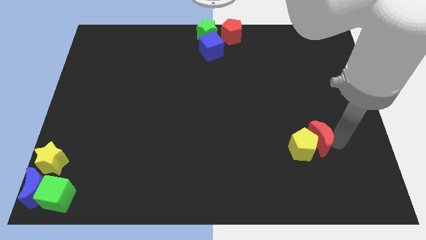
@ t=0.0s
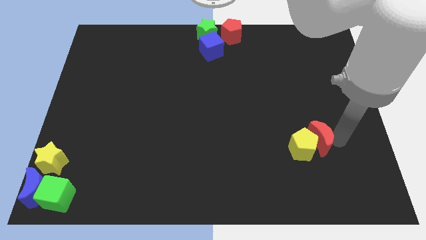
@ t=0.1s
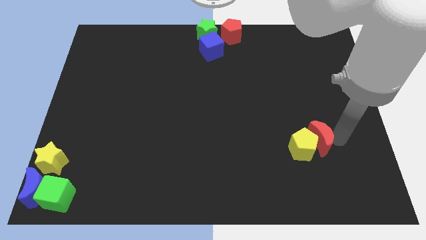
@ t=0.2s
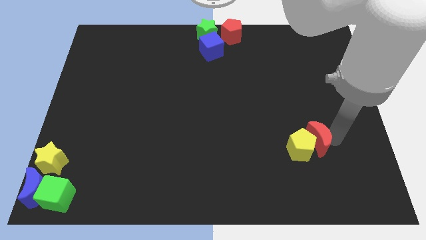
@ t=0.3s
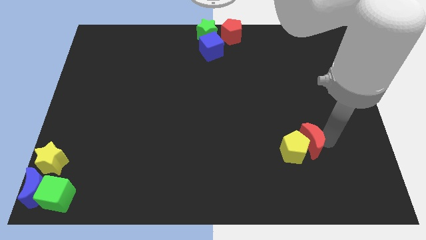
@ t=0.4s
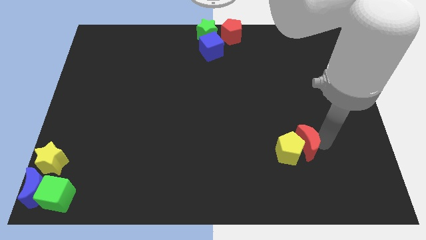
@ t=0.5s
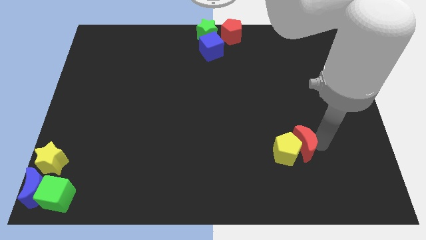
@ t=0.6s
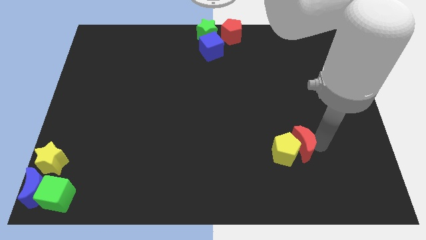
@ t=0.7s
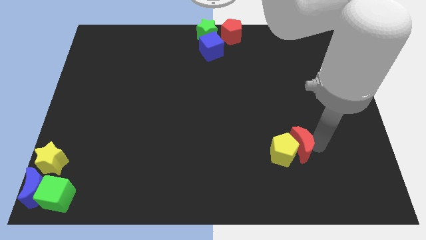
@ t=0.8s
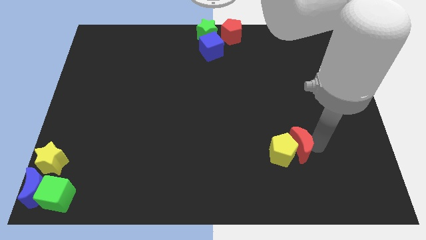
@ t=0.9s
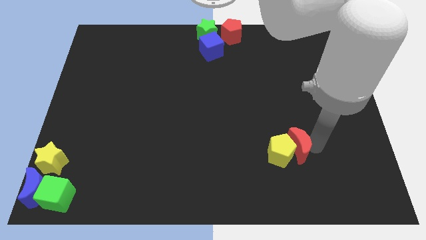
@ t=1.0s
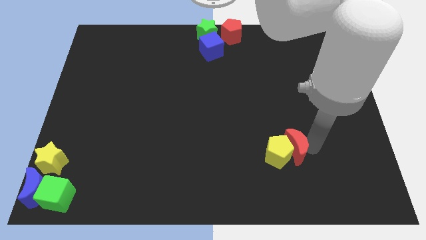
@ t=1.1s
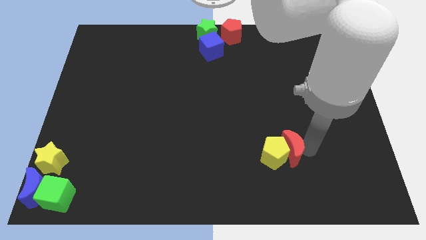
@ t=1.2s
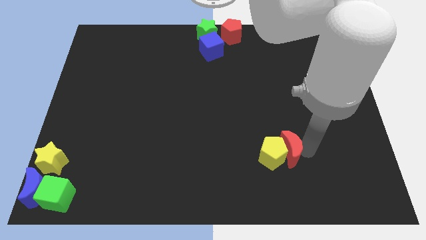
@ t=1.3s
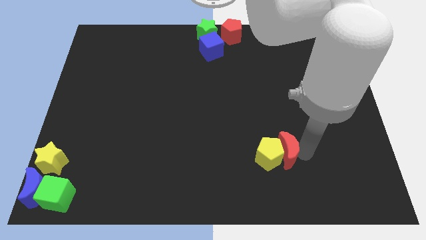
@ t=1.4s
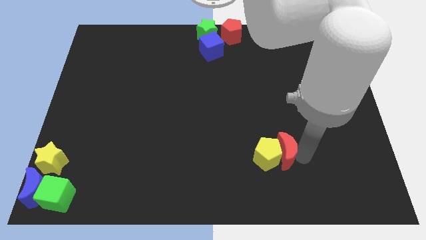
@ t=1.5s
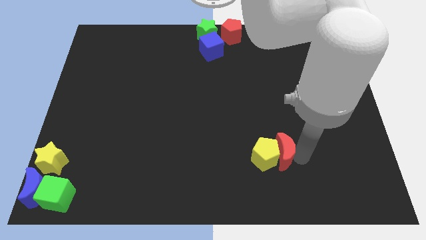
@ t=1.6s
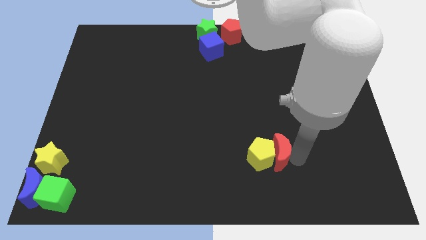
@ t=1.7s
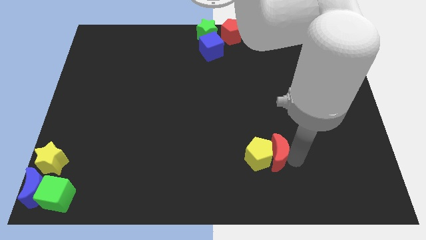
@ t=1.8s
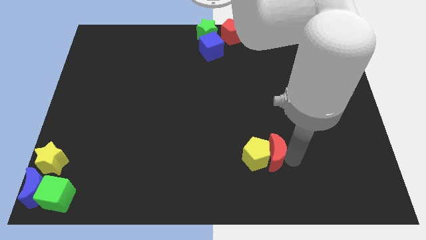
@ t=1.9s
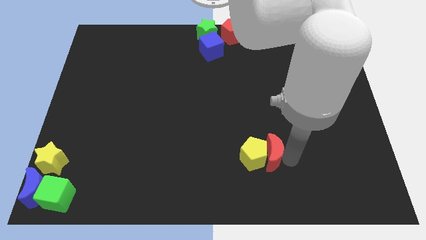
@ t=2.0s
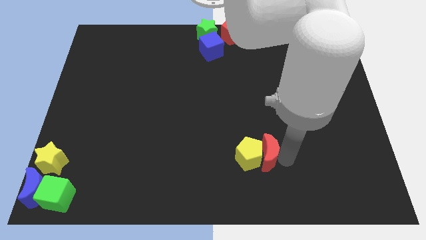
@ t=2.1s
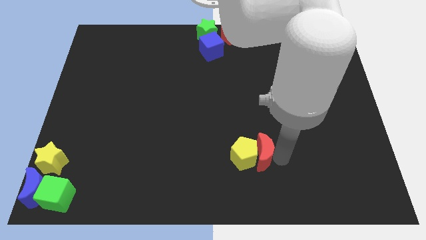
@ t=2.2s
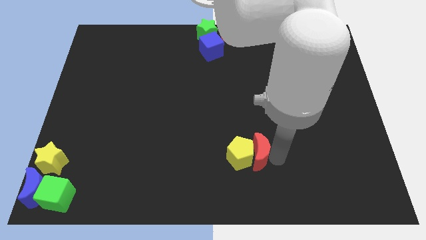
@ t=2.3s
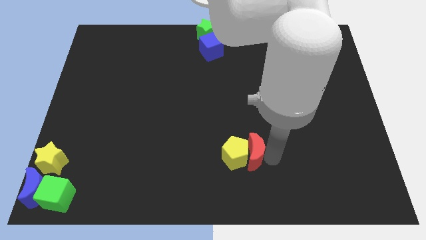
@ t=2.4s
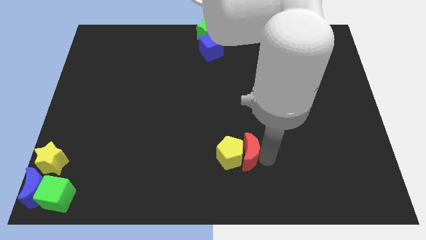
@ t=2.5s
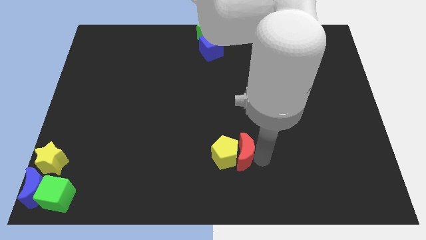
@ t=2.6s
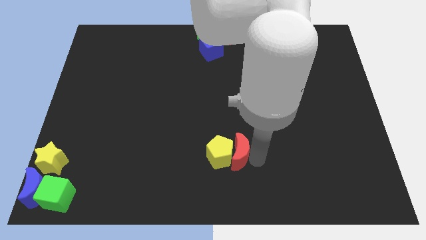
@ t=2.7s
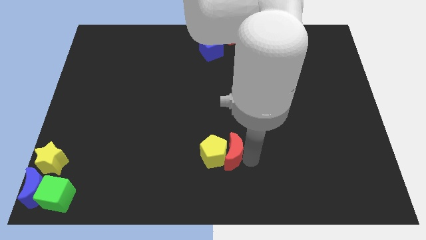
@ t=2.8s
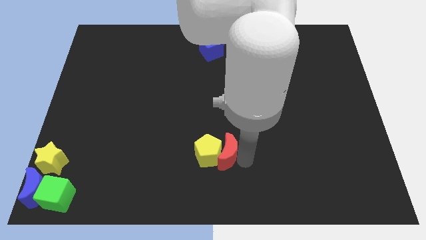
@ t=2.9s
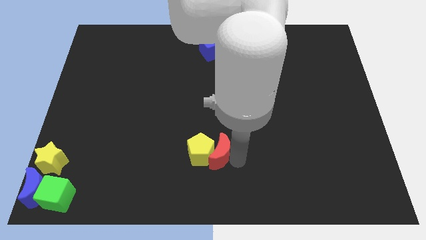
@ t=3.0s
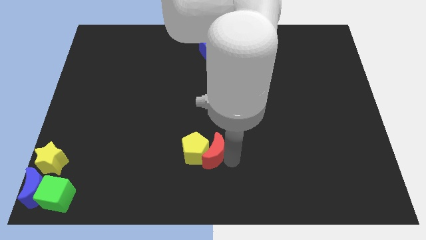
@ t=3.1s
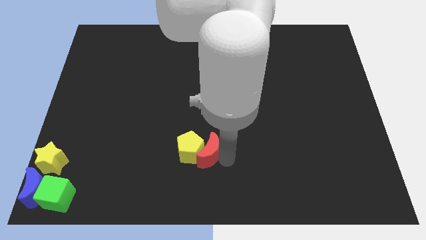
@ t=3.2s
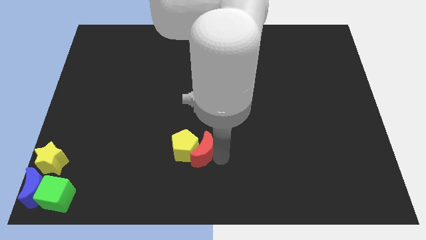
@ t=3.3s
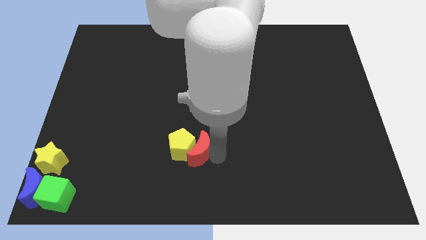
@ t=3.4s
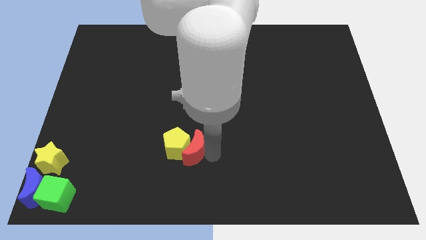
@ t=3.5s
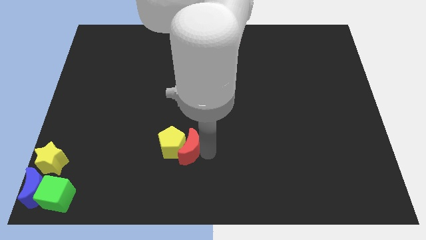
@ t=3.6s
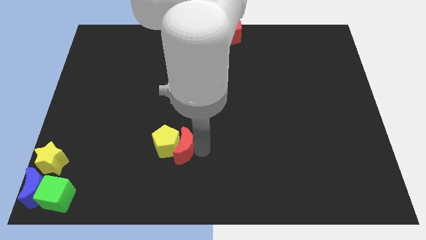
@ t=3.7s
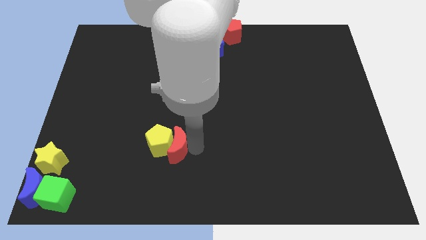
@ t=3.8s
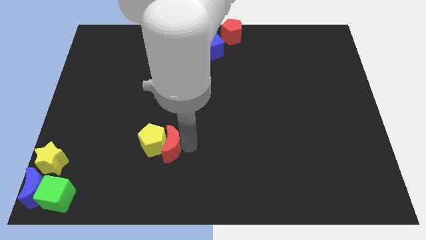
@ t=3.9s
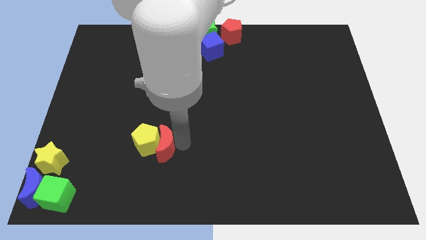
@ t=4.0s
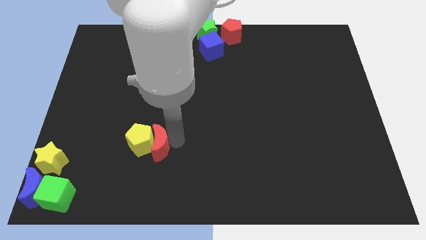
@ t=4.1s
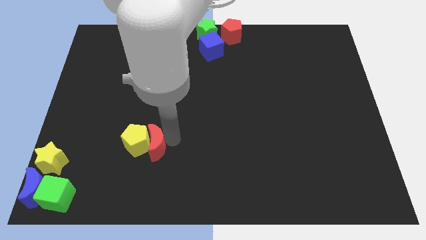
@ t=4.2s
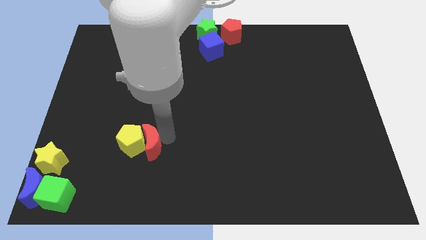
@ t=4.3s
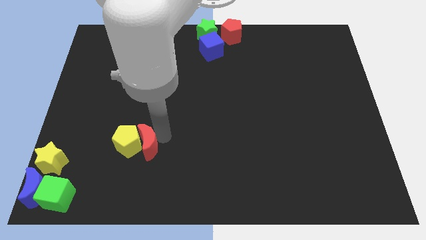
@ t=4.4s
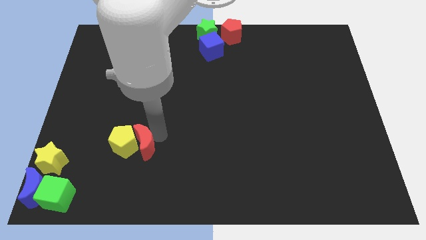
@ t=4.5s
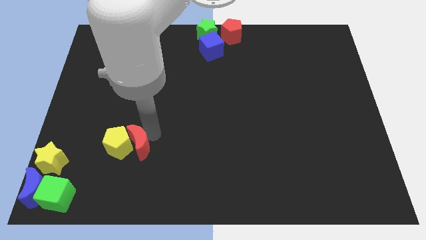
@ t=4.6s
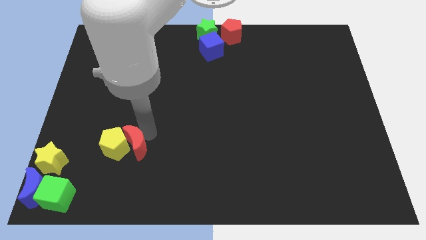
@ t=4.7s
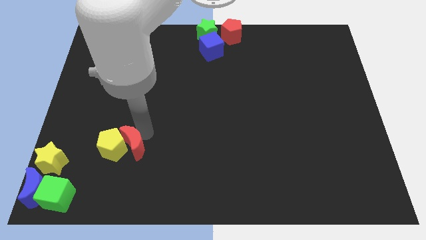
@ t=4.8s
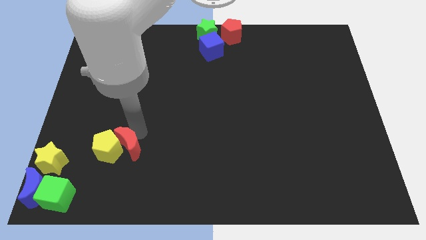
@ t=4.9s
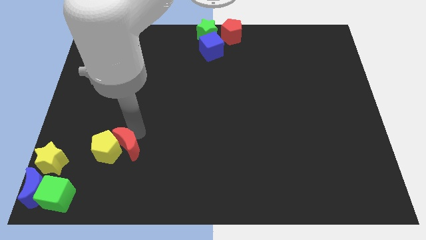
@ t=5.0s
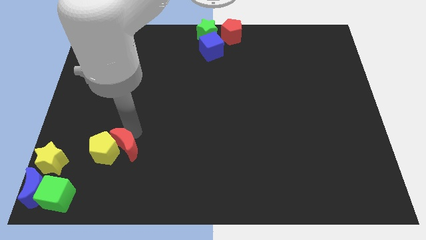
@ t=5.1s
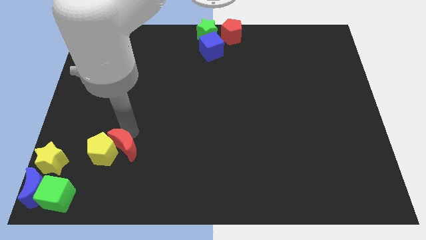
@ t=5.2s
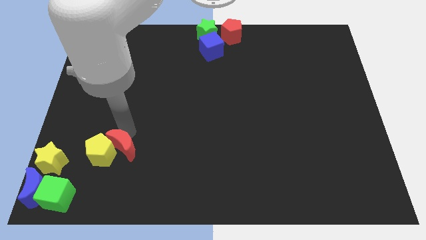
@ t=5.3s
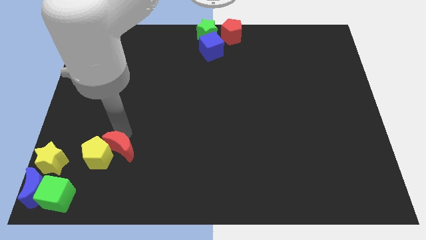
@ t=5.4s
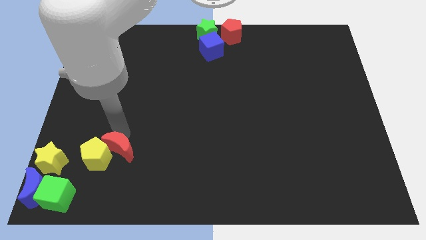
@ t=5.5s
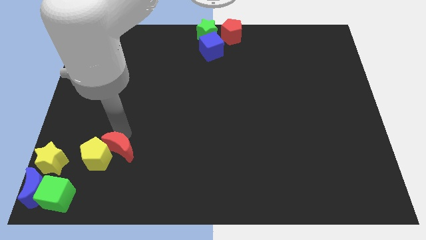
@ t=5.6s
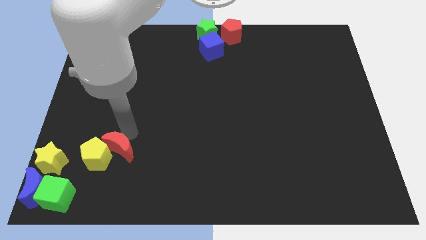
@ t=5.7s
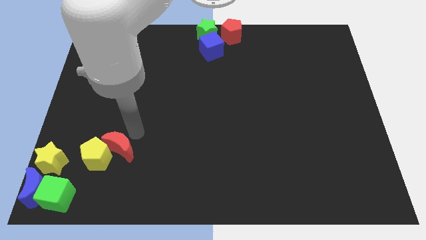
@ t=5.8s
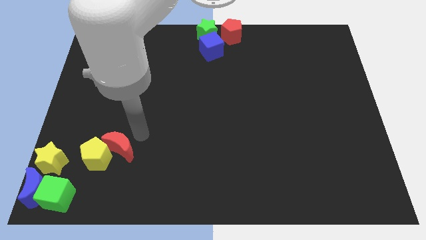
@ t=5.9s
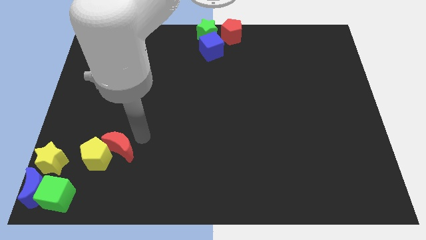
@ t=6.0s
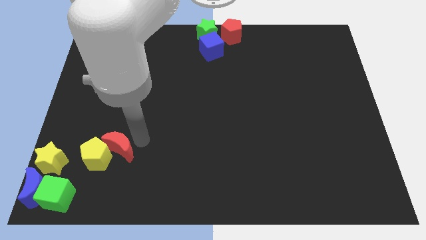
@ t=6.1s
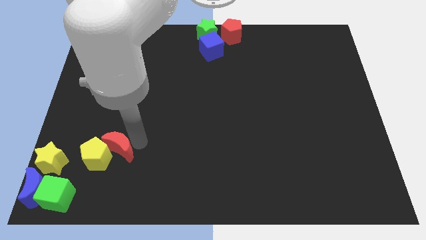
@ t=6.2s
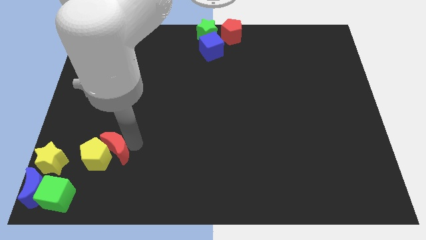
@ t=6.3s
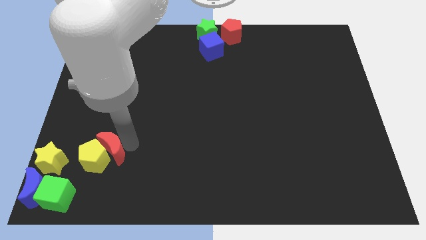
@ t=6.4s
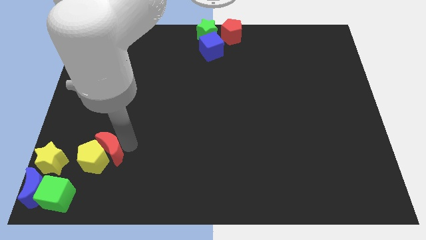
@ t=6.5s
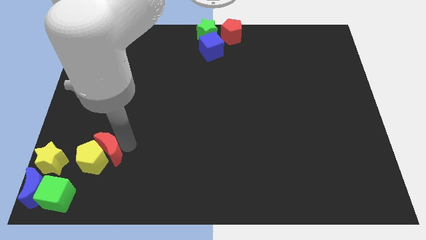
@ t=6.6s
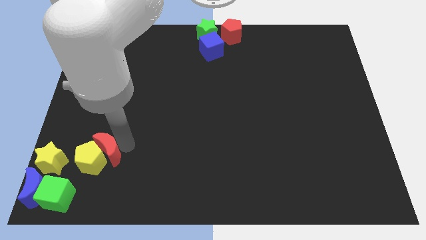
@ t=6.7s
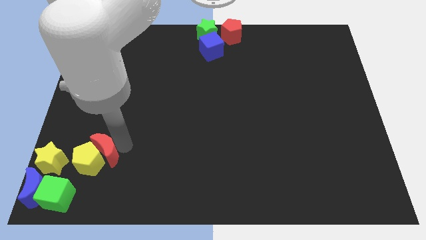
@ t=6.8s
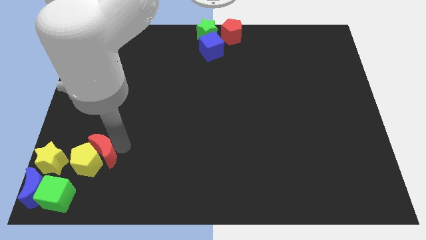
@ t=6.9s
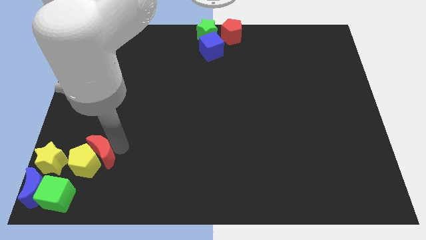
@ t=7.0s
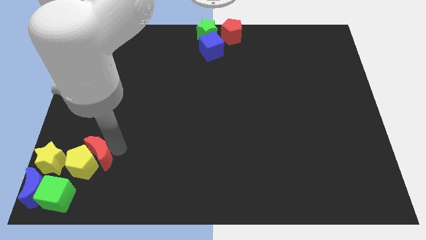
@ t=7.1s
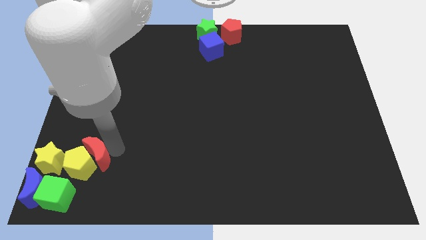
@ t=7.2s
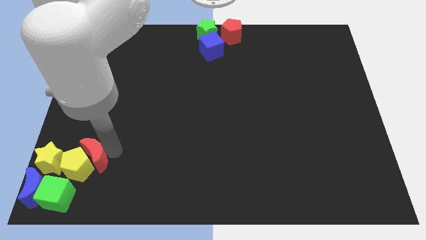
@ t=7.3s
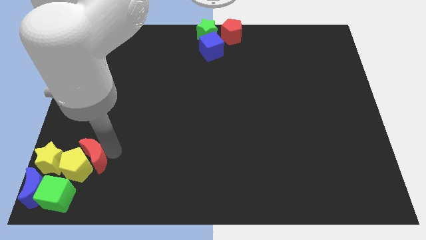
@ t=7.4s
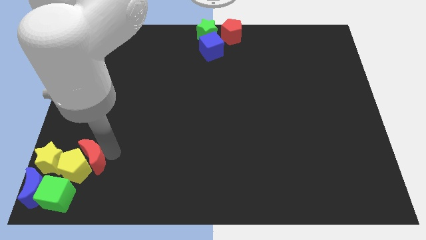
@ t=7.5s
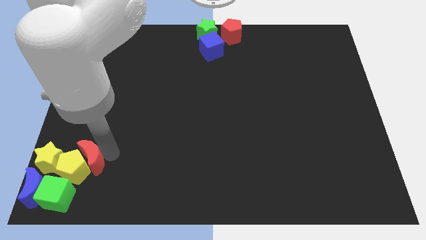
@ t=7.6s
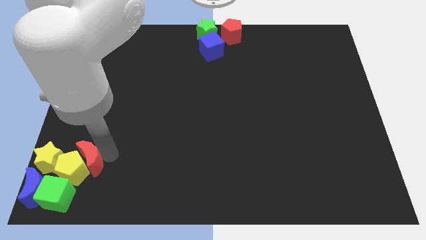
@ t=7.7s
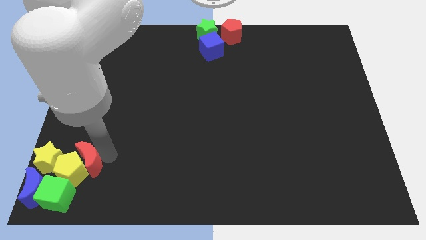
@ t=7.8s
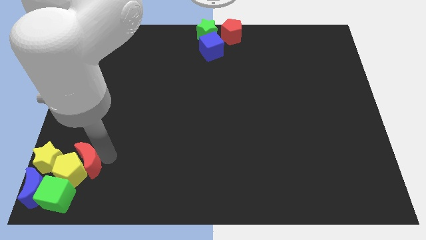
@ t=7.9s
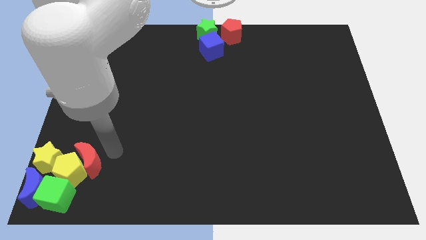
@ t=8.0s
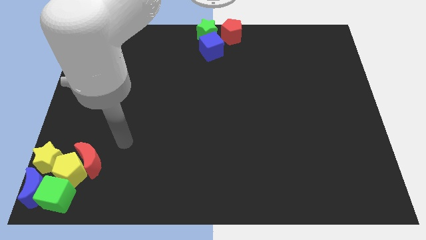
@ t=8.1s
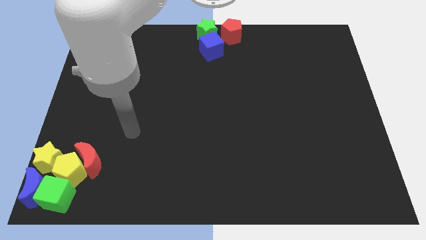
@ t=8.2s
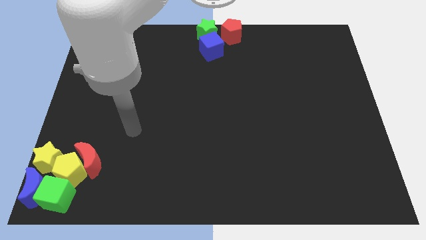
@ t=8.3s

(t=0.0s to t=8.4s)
push the yellow pentagon and red moon into the group

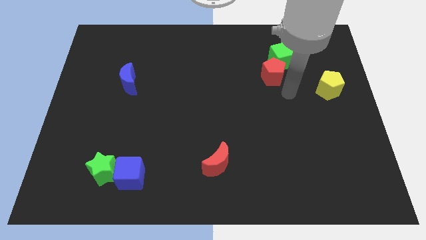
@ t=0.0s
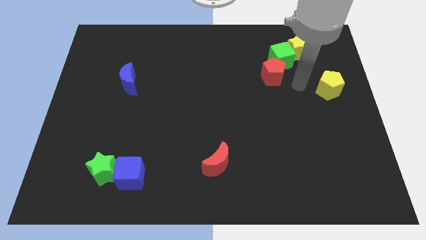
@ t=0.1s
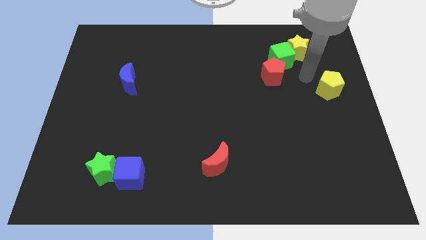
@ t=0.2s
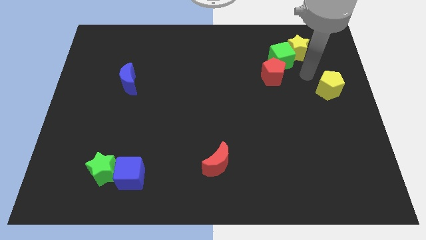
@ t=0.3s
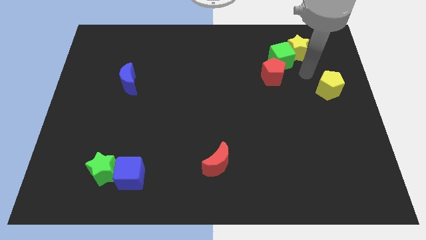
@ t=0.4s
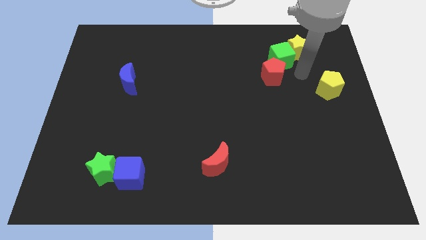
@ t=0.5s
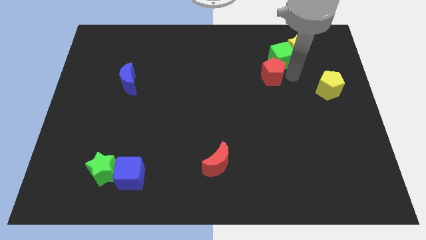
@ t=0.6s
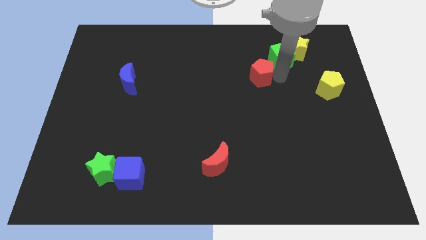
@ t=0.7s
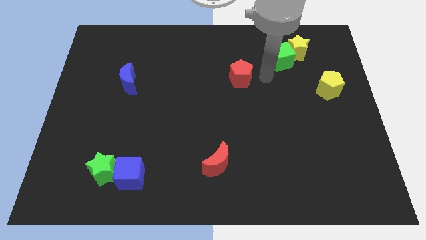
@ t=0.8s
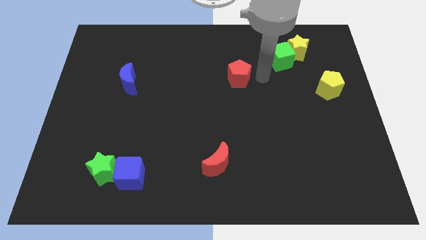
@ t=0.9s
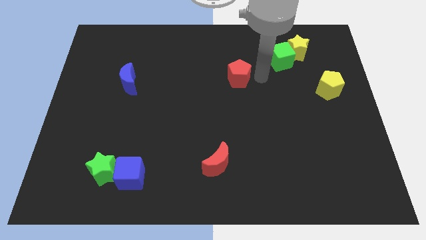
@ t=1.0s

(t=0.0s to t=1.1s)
slide the red pentagon to the left side of the board
